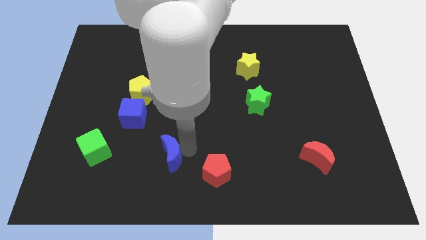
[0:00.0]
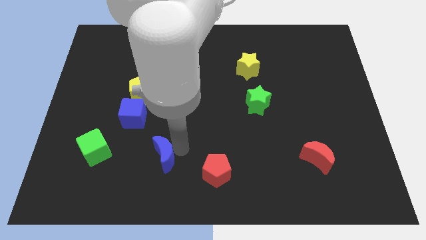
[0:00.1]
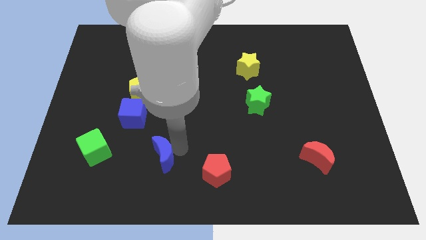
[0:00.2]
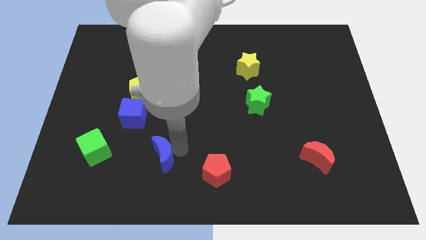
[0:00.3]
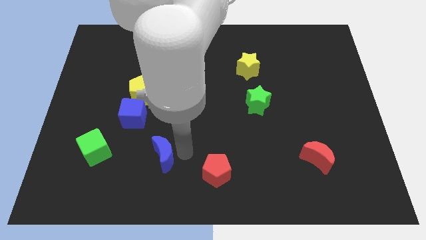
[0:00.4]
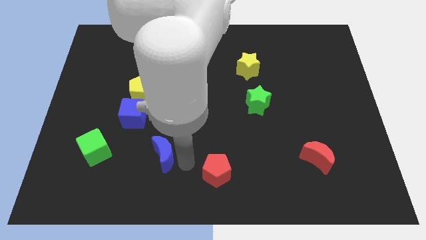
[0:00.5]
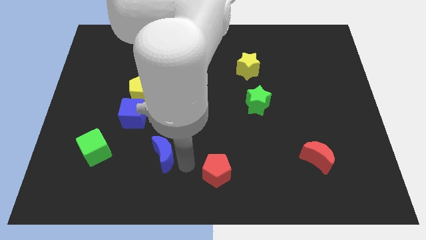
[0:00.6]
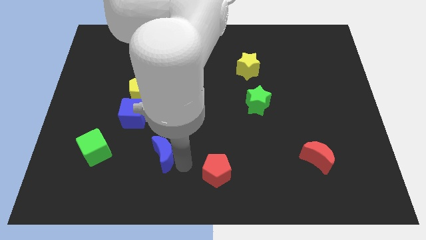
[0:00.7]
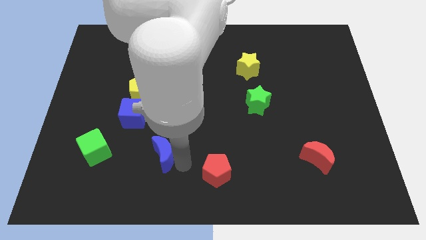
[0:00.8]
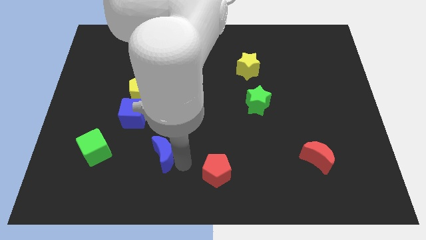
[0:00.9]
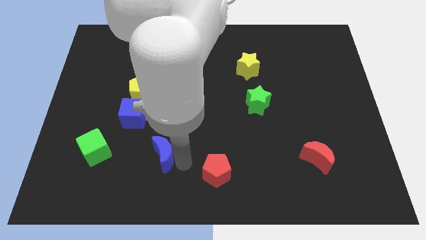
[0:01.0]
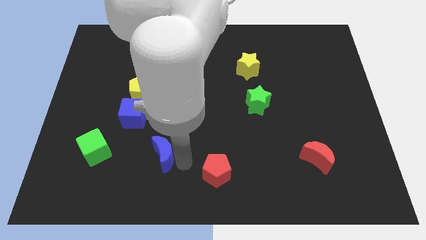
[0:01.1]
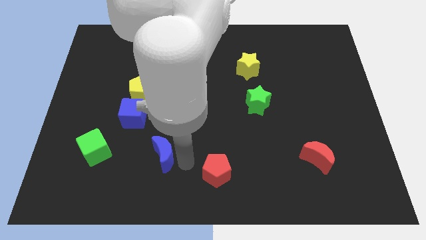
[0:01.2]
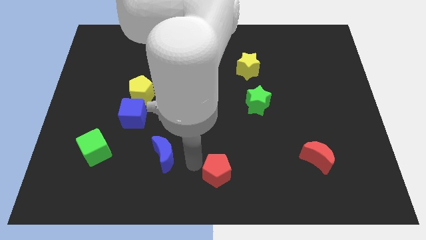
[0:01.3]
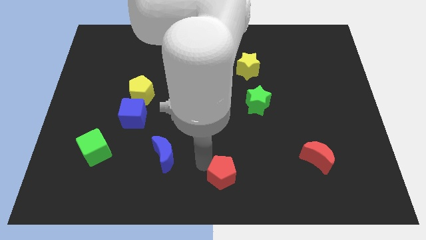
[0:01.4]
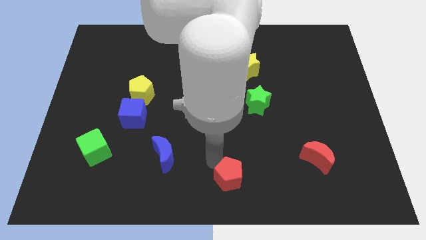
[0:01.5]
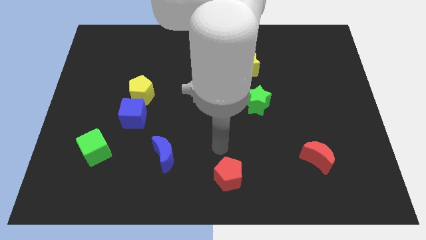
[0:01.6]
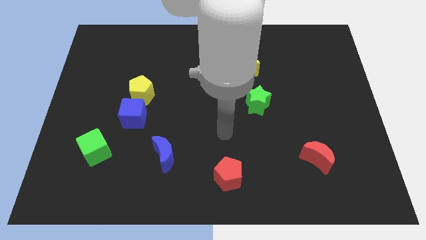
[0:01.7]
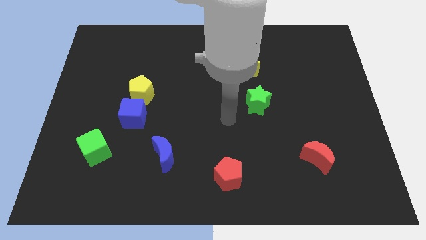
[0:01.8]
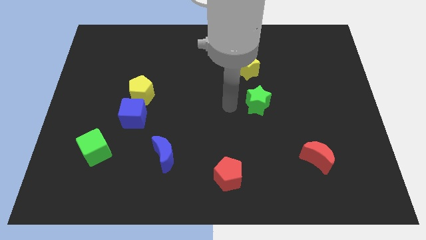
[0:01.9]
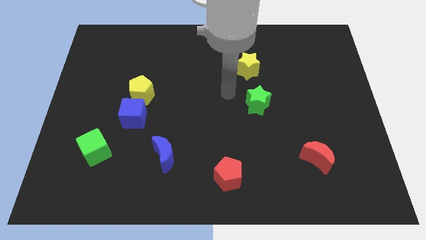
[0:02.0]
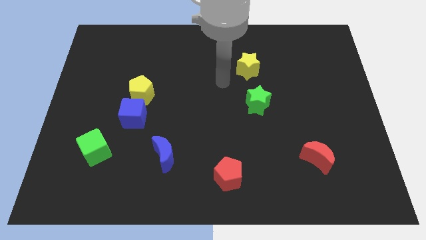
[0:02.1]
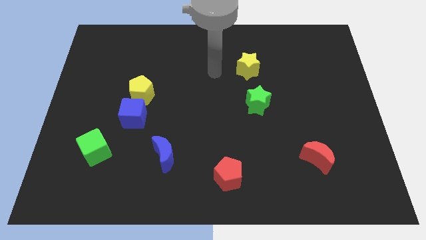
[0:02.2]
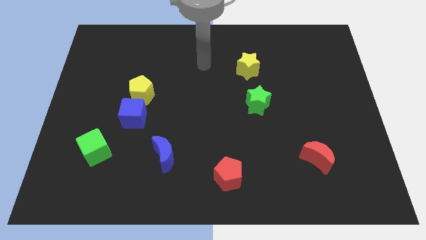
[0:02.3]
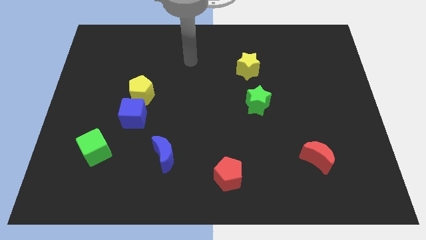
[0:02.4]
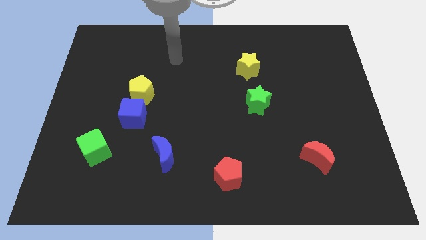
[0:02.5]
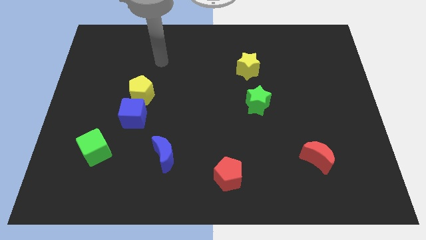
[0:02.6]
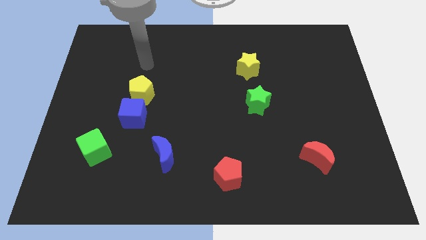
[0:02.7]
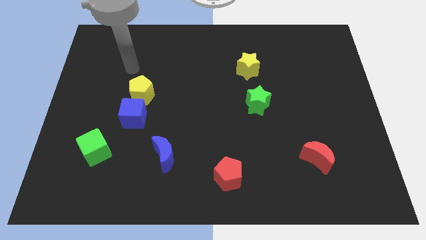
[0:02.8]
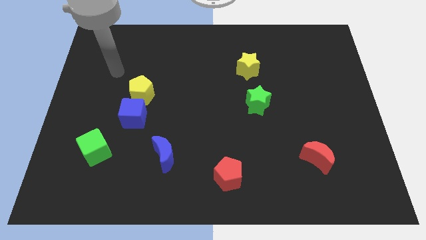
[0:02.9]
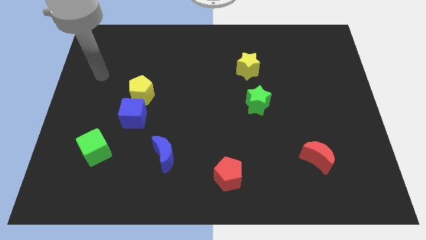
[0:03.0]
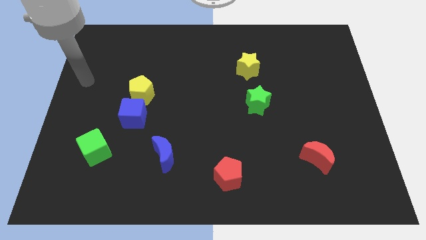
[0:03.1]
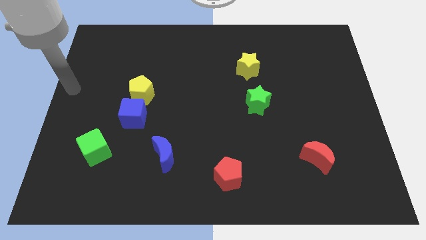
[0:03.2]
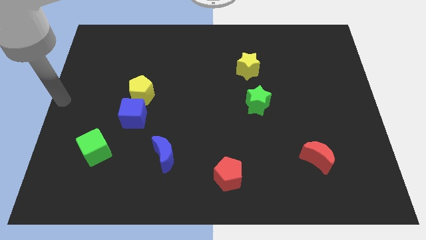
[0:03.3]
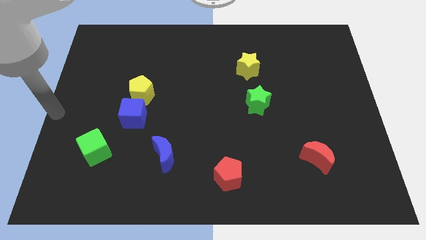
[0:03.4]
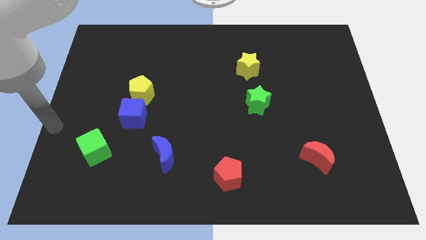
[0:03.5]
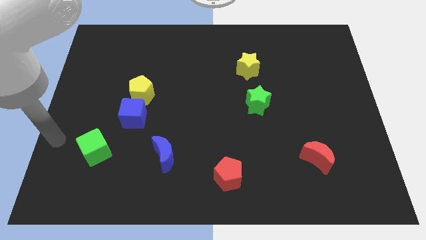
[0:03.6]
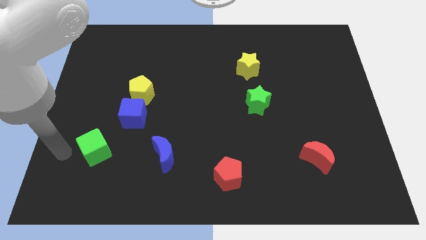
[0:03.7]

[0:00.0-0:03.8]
place your arm to the left of the green cube

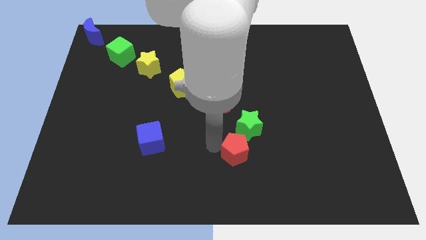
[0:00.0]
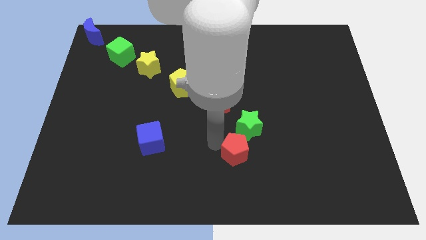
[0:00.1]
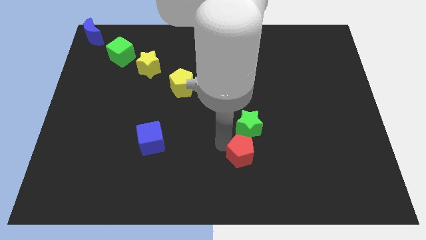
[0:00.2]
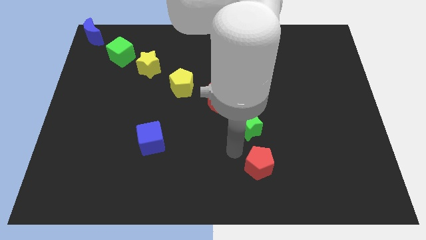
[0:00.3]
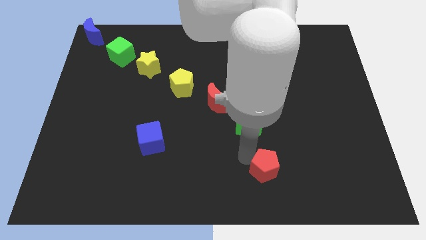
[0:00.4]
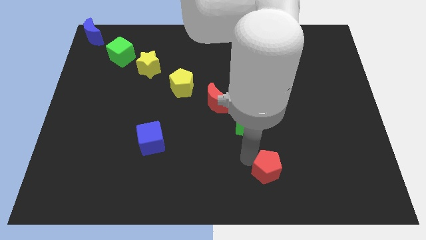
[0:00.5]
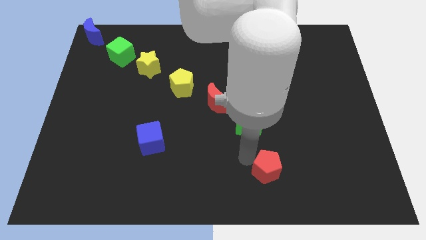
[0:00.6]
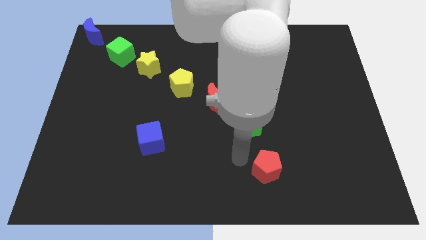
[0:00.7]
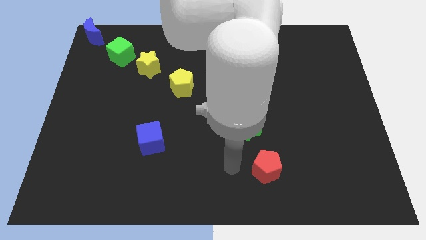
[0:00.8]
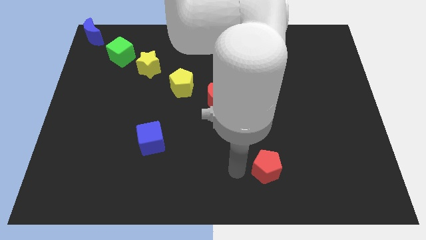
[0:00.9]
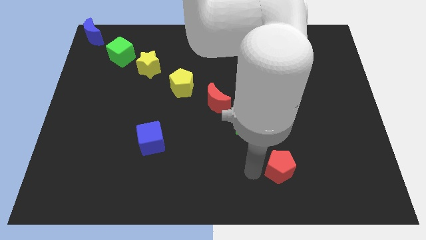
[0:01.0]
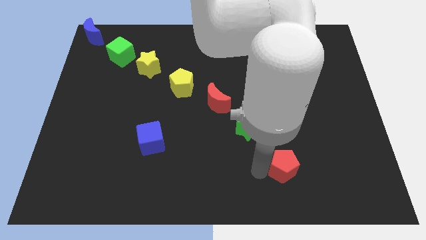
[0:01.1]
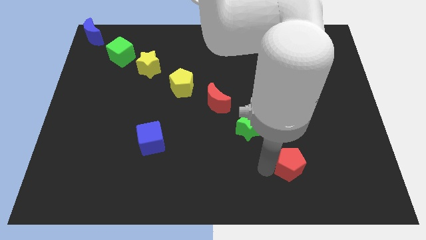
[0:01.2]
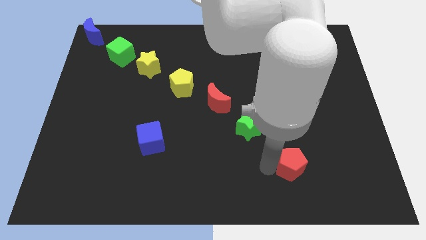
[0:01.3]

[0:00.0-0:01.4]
push the red pentagon slightly to the right side of the board

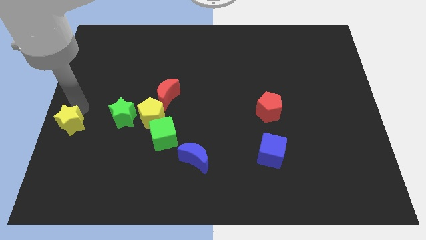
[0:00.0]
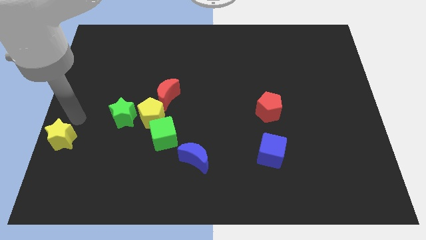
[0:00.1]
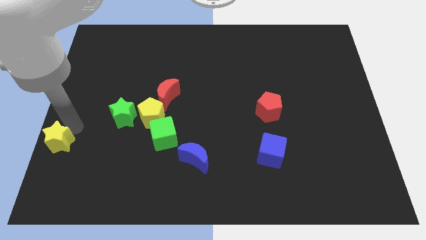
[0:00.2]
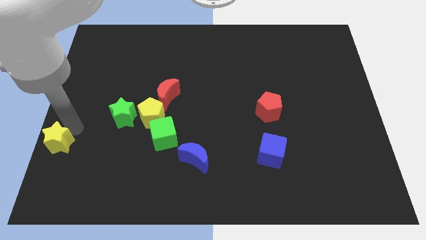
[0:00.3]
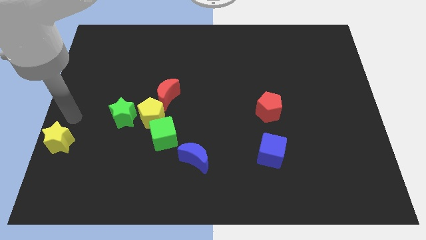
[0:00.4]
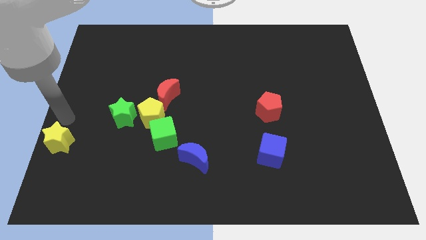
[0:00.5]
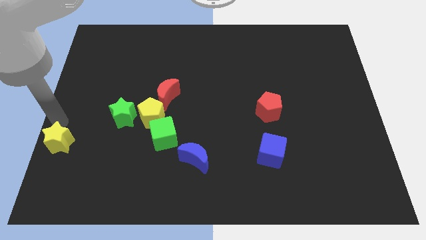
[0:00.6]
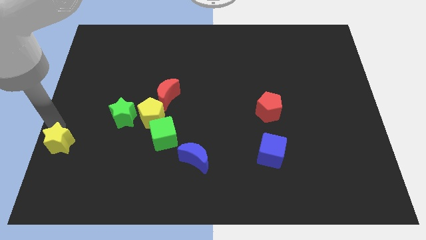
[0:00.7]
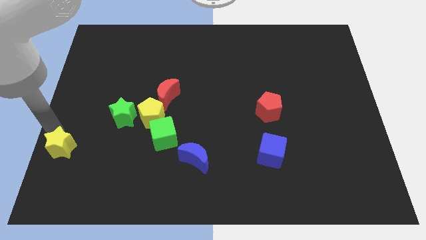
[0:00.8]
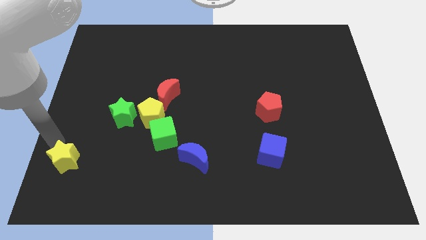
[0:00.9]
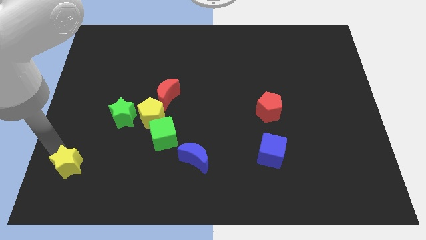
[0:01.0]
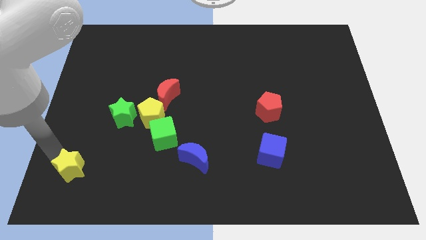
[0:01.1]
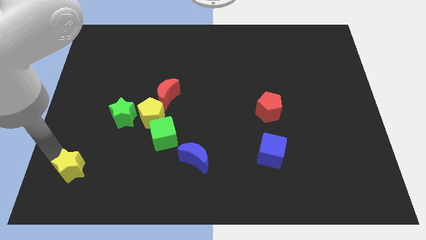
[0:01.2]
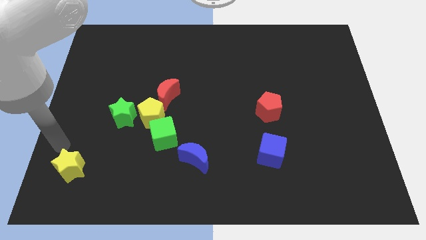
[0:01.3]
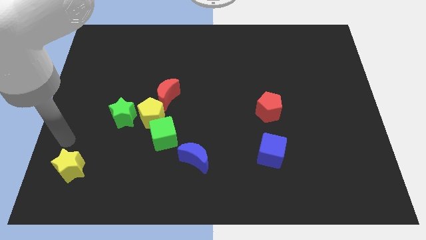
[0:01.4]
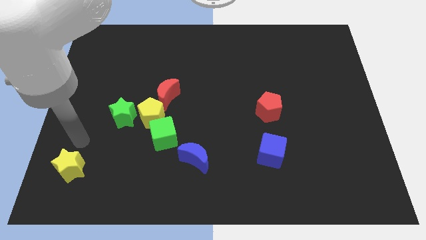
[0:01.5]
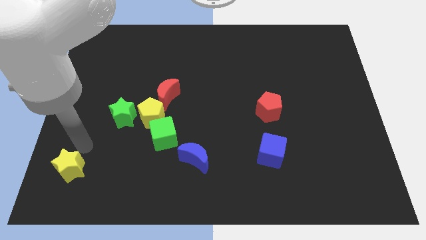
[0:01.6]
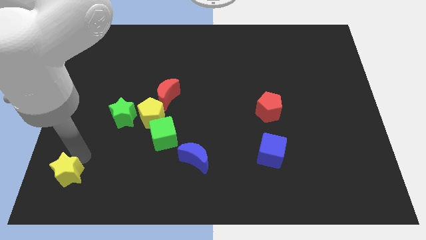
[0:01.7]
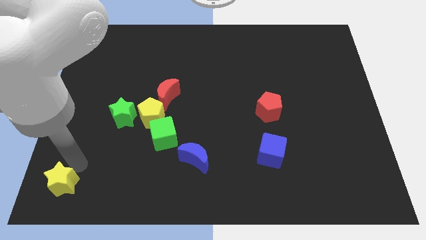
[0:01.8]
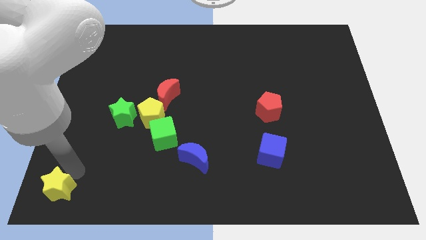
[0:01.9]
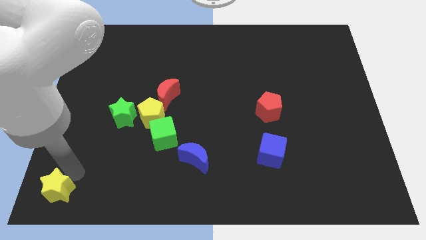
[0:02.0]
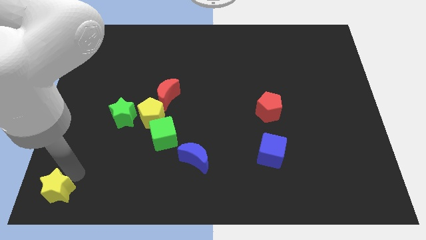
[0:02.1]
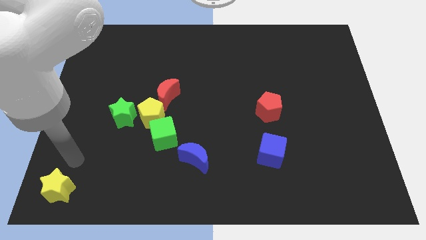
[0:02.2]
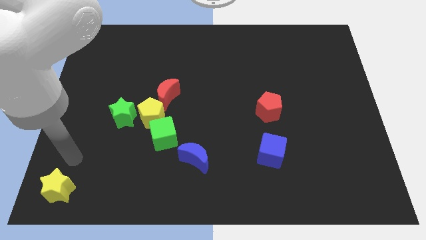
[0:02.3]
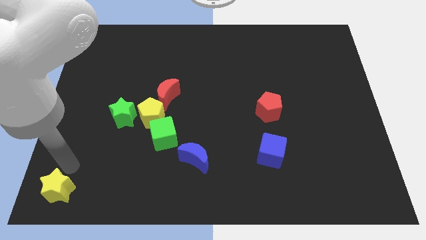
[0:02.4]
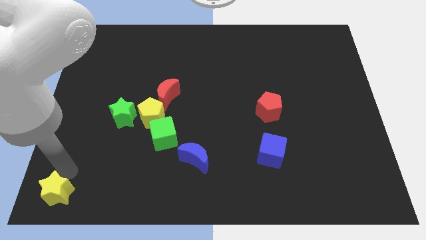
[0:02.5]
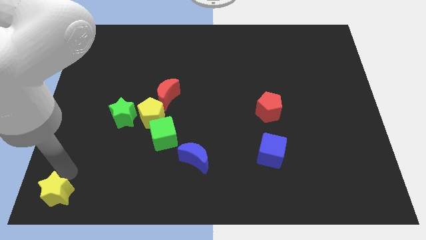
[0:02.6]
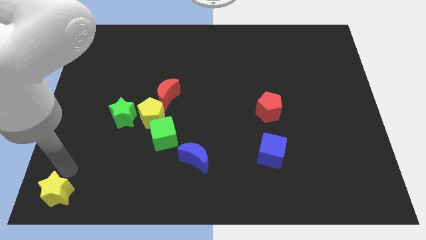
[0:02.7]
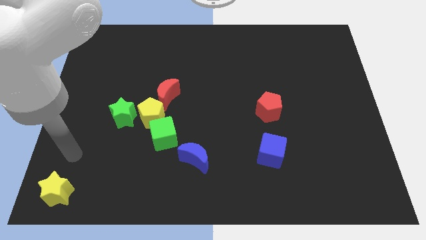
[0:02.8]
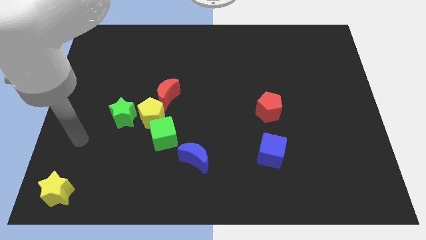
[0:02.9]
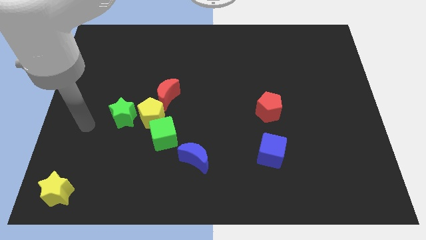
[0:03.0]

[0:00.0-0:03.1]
push yellow star at bottom left corner

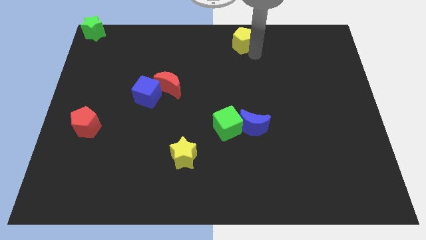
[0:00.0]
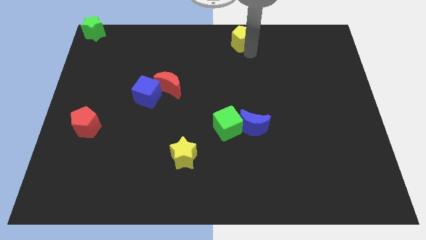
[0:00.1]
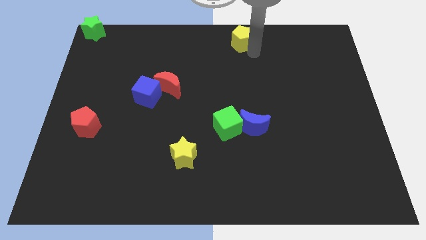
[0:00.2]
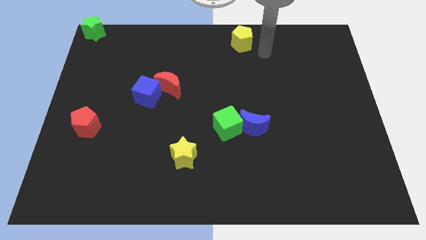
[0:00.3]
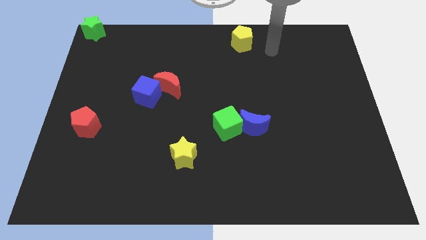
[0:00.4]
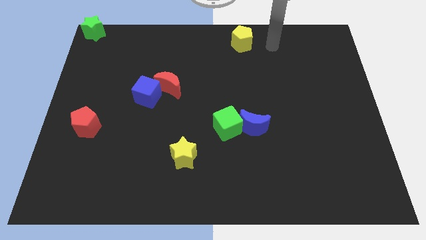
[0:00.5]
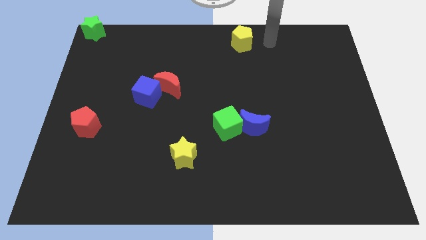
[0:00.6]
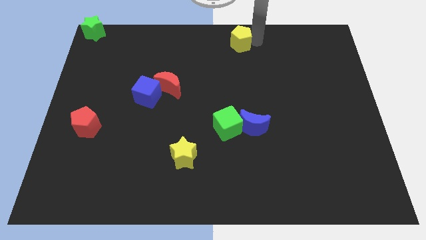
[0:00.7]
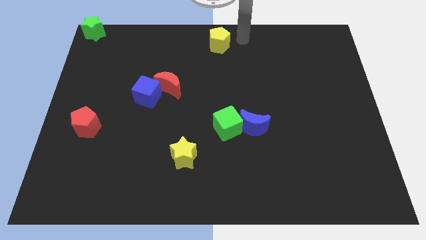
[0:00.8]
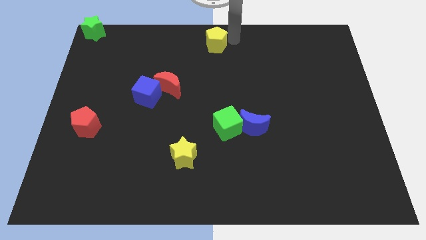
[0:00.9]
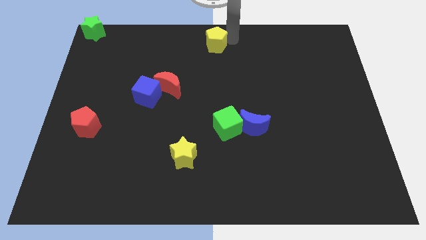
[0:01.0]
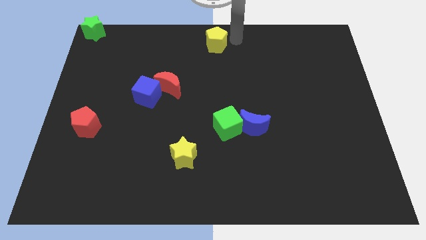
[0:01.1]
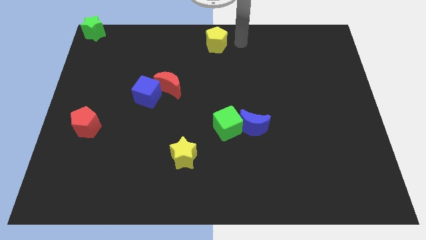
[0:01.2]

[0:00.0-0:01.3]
place yellow pentagon at the top center of the board
